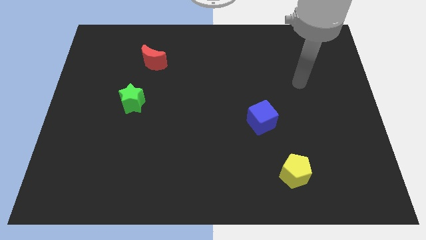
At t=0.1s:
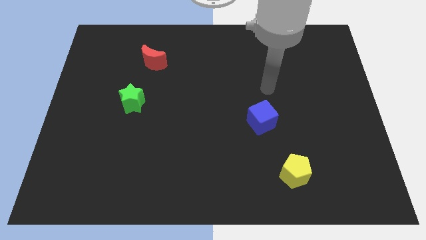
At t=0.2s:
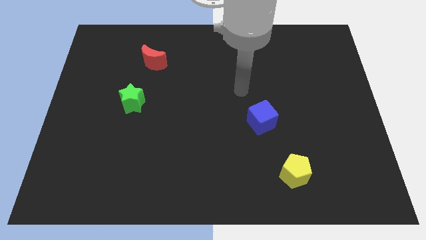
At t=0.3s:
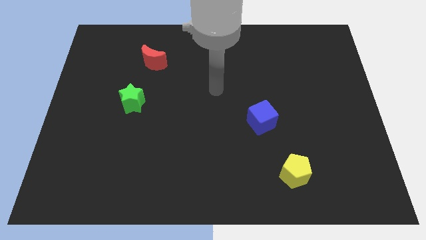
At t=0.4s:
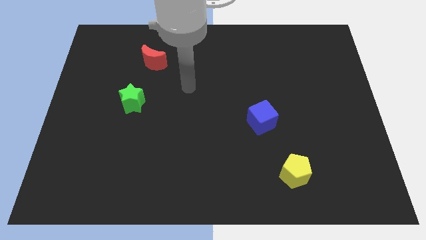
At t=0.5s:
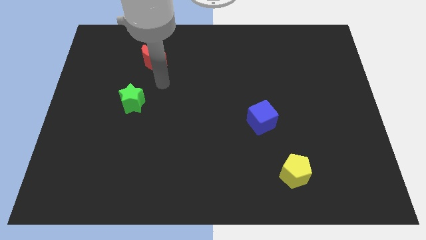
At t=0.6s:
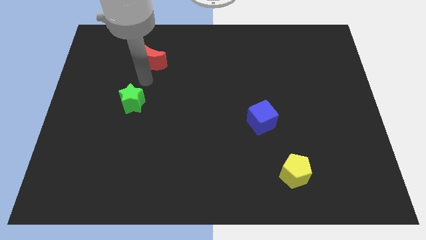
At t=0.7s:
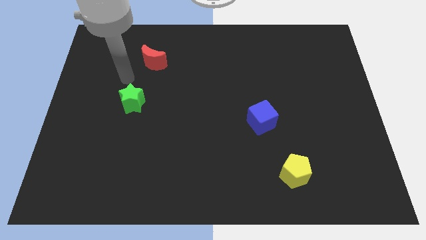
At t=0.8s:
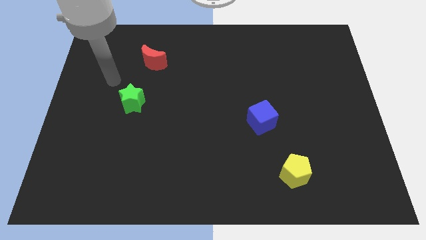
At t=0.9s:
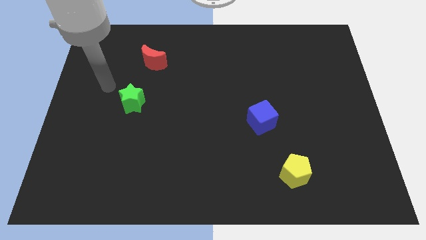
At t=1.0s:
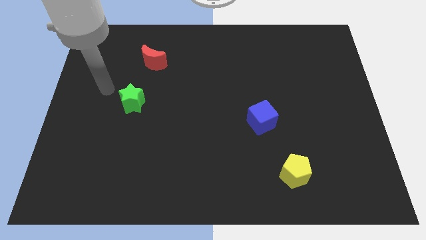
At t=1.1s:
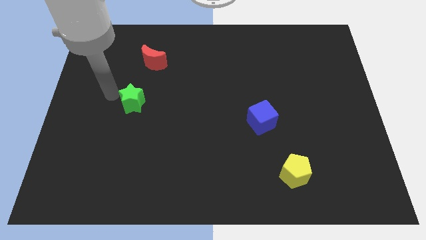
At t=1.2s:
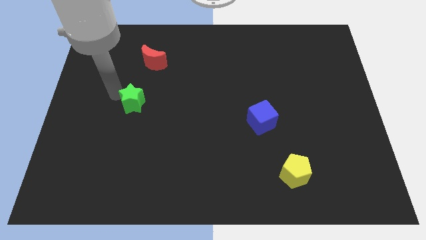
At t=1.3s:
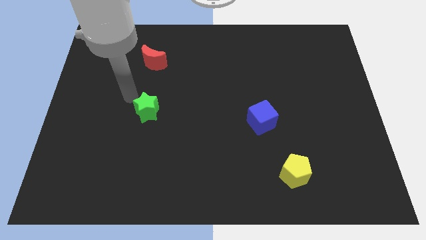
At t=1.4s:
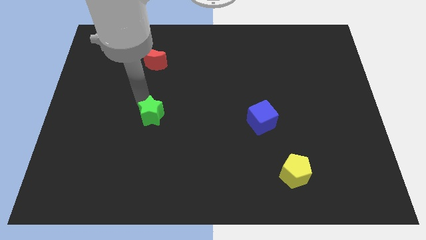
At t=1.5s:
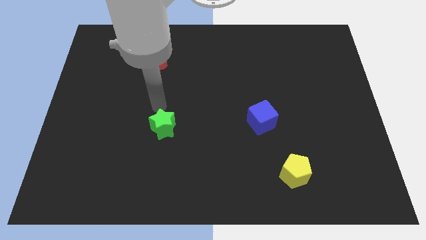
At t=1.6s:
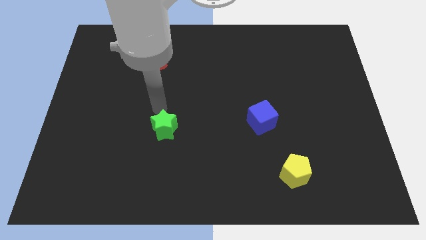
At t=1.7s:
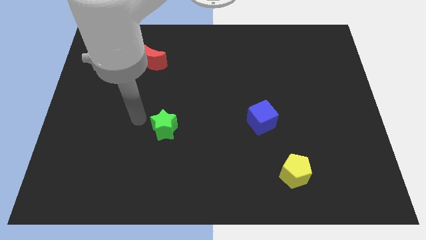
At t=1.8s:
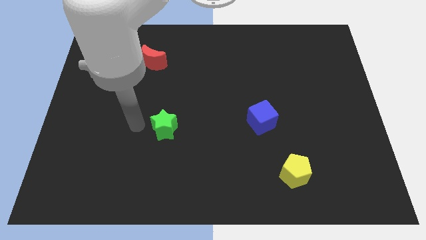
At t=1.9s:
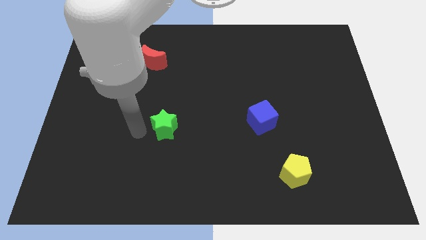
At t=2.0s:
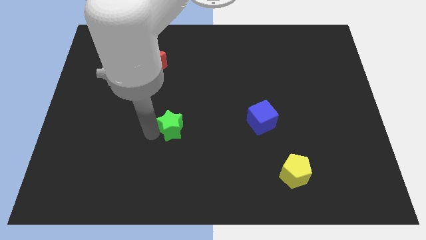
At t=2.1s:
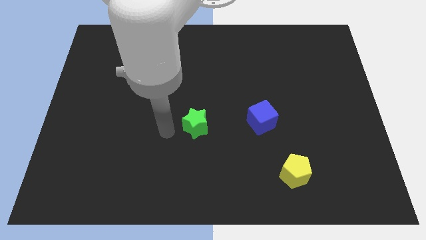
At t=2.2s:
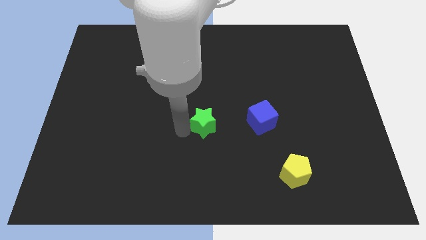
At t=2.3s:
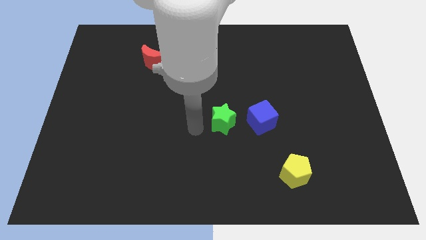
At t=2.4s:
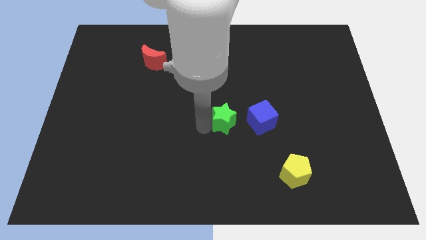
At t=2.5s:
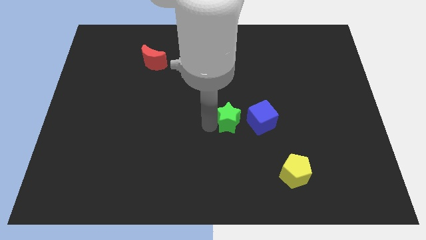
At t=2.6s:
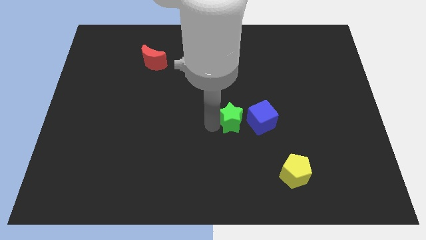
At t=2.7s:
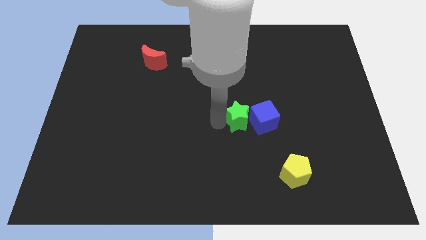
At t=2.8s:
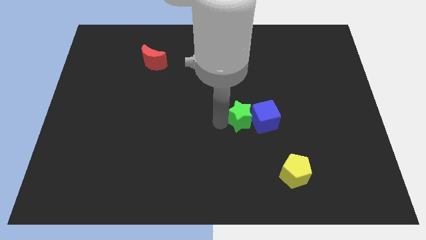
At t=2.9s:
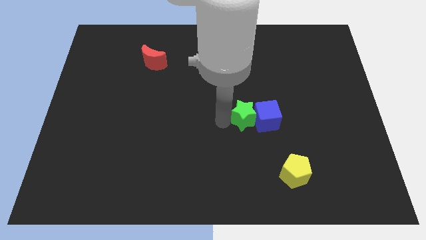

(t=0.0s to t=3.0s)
slide the green block close to the cube

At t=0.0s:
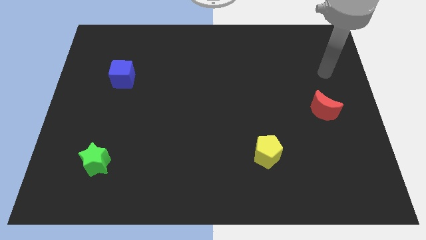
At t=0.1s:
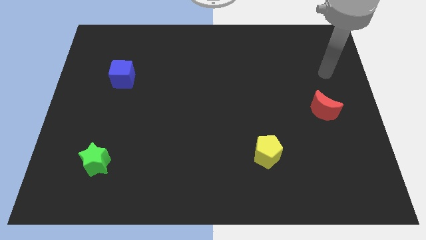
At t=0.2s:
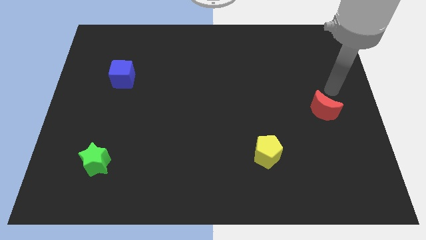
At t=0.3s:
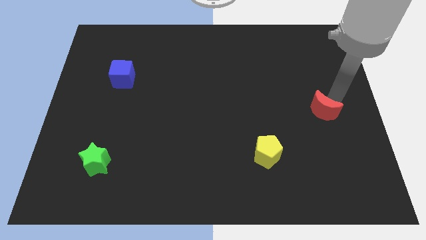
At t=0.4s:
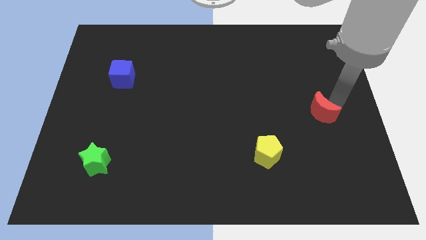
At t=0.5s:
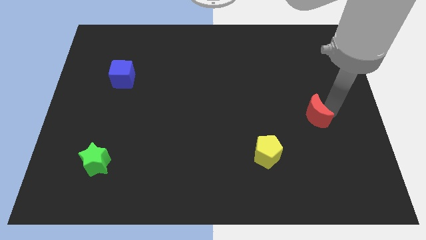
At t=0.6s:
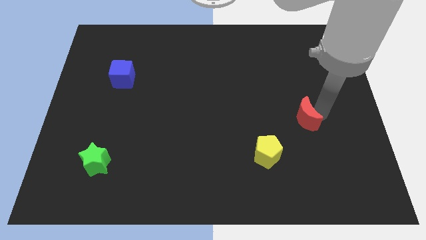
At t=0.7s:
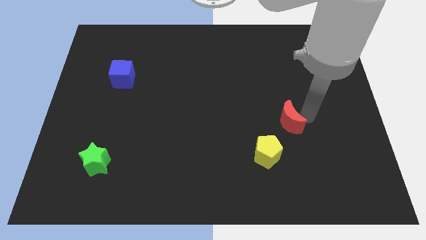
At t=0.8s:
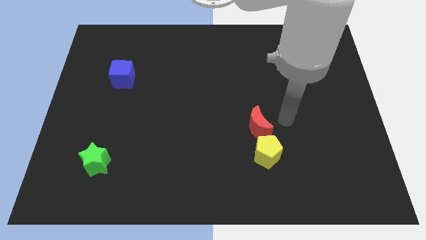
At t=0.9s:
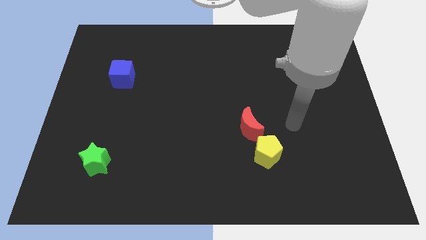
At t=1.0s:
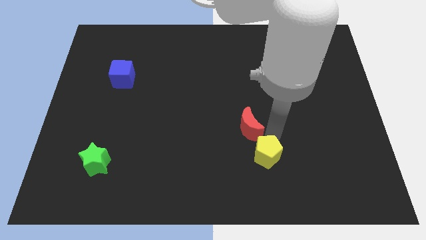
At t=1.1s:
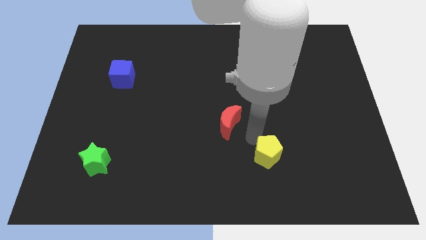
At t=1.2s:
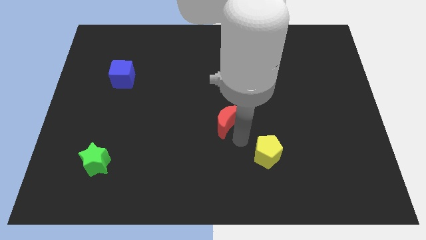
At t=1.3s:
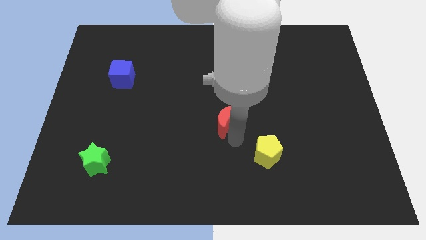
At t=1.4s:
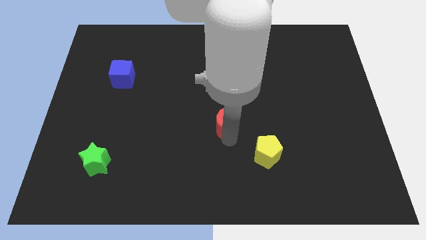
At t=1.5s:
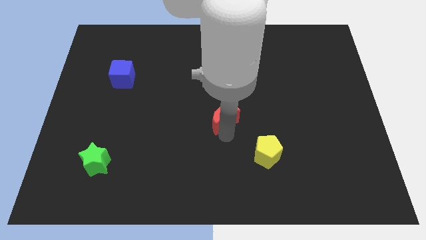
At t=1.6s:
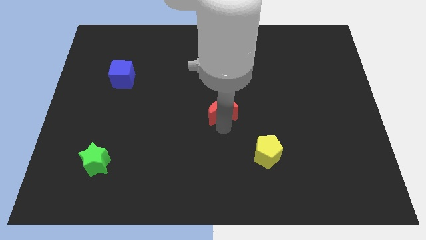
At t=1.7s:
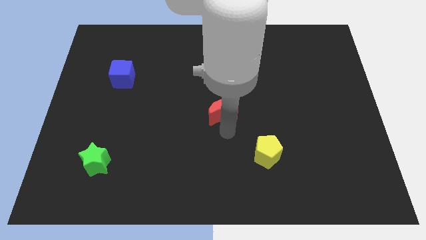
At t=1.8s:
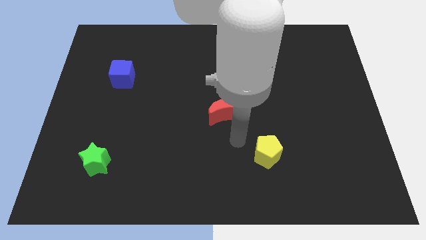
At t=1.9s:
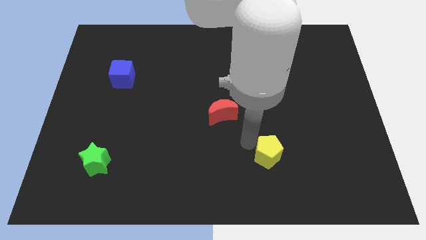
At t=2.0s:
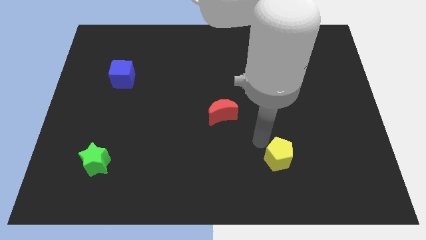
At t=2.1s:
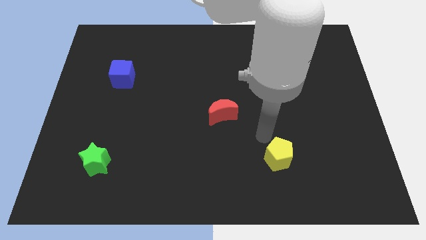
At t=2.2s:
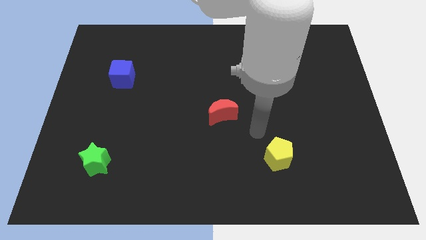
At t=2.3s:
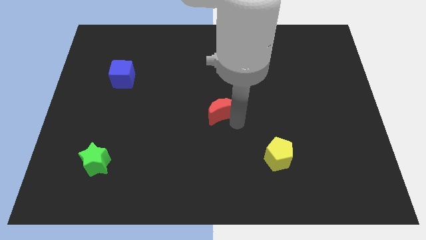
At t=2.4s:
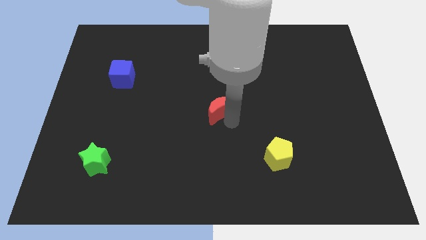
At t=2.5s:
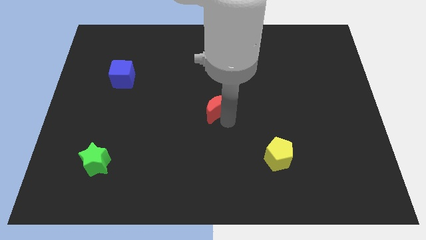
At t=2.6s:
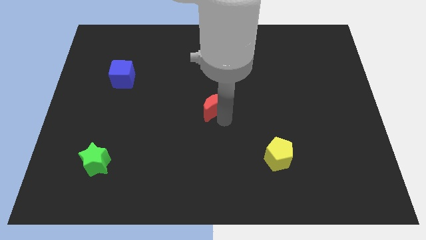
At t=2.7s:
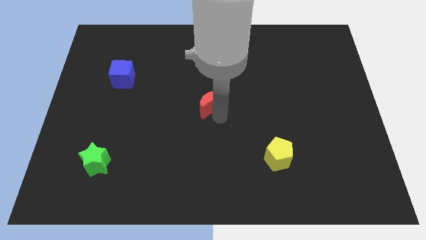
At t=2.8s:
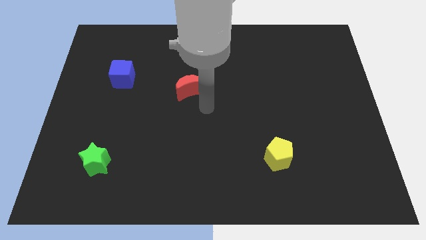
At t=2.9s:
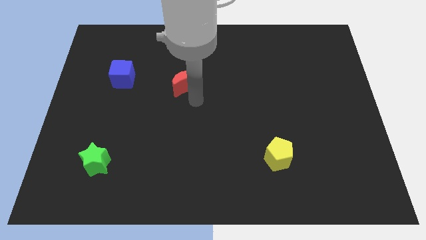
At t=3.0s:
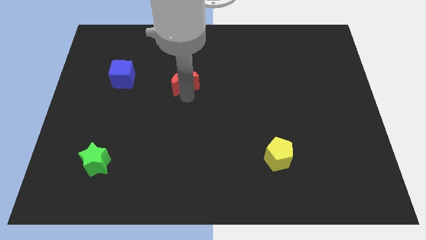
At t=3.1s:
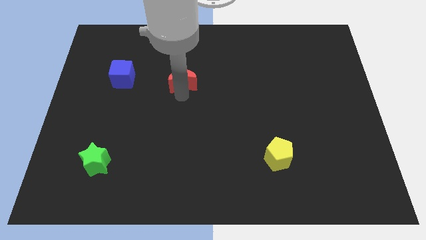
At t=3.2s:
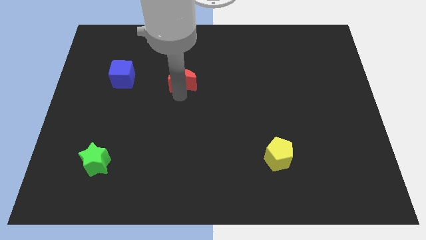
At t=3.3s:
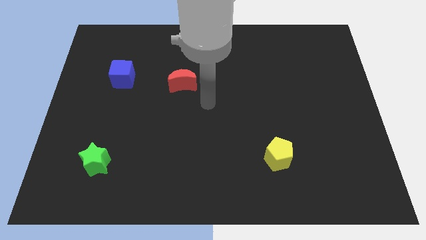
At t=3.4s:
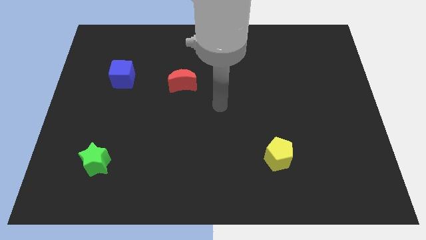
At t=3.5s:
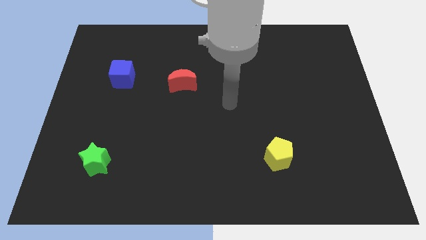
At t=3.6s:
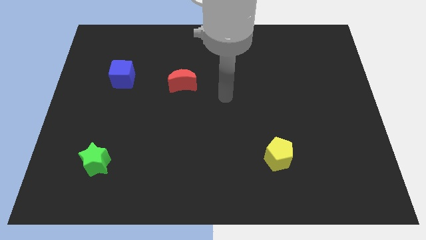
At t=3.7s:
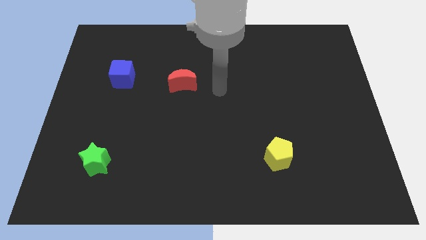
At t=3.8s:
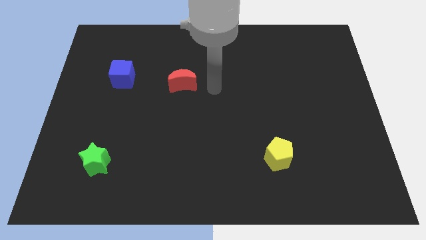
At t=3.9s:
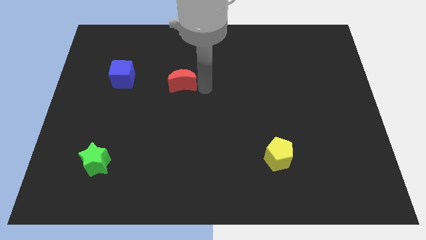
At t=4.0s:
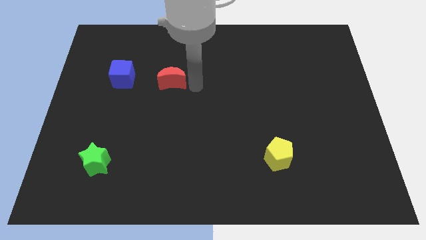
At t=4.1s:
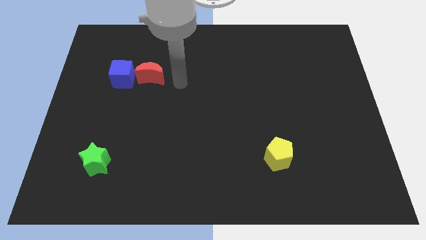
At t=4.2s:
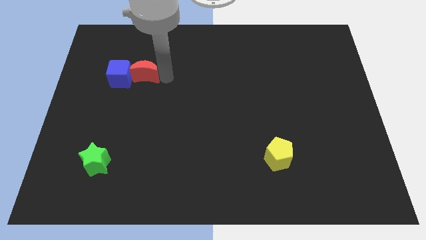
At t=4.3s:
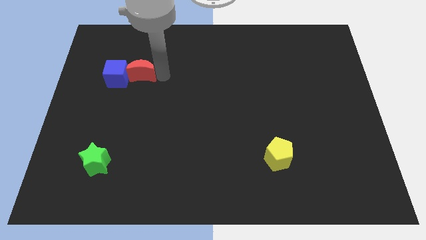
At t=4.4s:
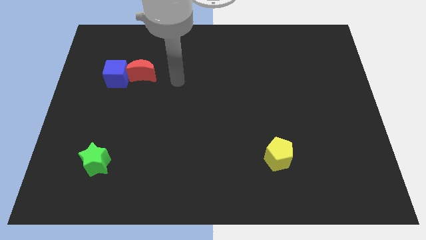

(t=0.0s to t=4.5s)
push the red block towards the blue cube

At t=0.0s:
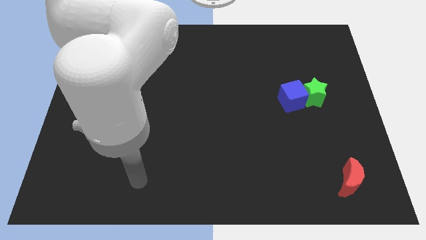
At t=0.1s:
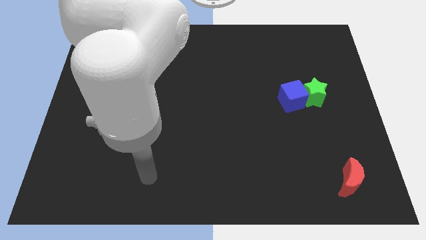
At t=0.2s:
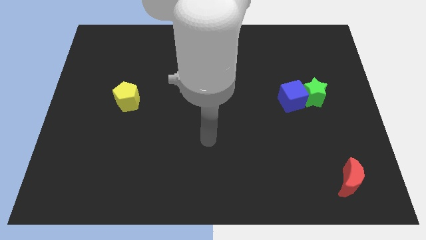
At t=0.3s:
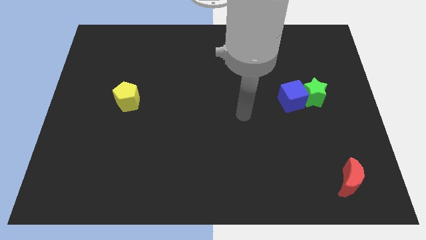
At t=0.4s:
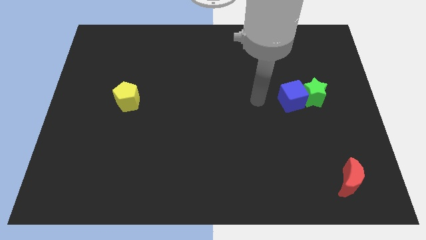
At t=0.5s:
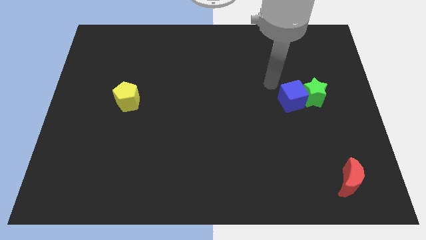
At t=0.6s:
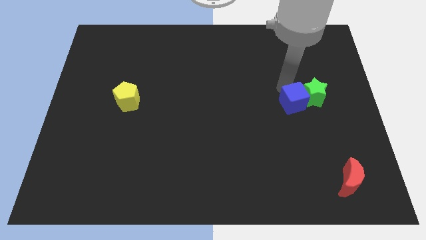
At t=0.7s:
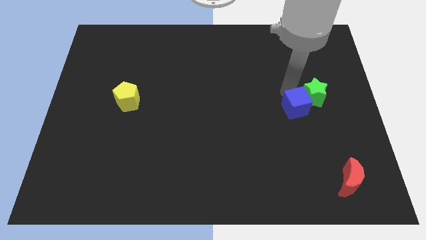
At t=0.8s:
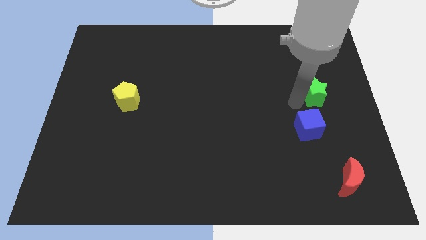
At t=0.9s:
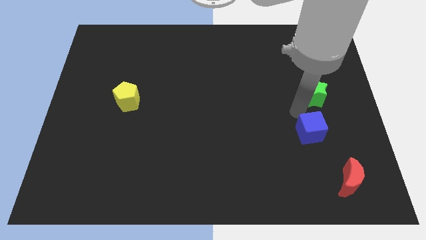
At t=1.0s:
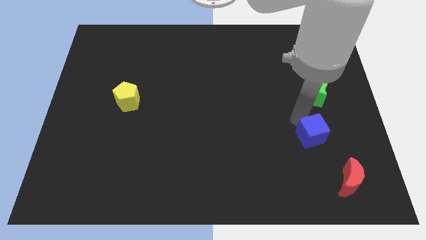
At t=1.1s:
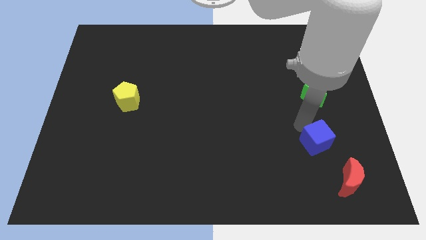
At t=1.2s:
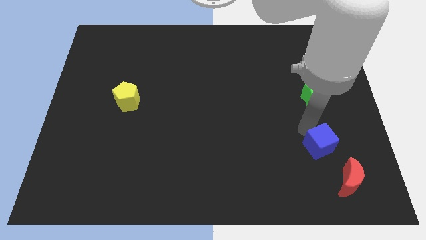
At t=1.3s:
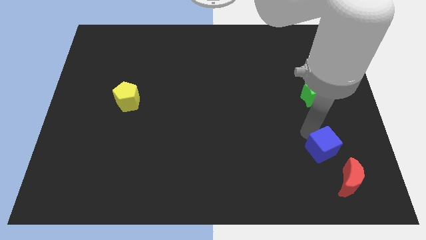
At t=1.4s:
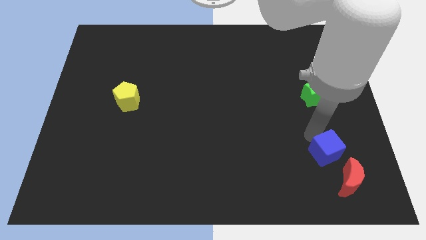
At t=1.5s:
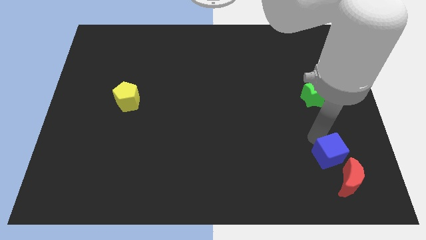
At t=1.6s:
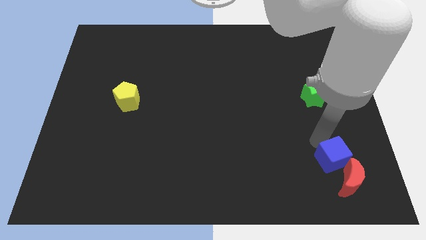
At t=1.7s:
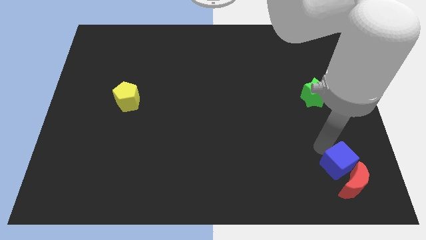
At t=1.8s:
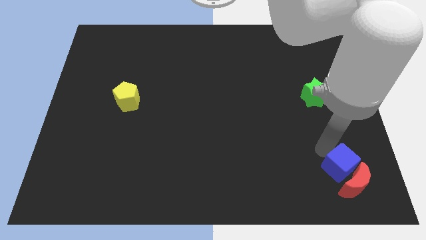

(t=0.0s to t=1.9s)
slide the cube close to the moon
